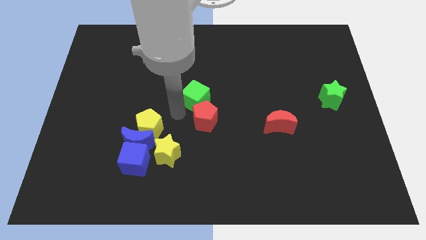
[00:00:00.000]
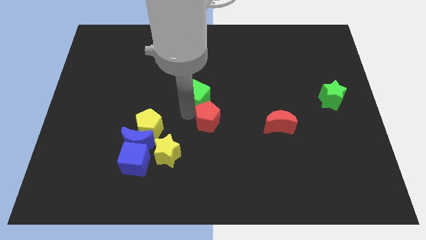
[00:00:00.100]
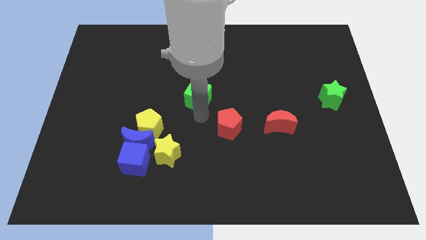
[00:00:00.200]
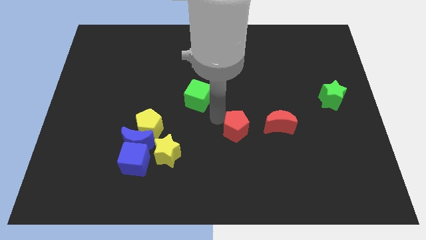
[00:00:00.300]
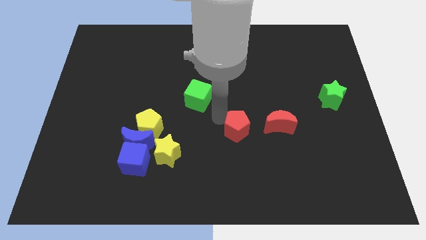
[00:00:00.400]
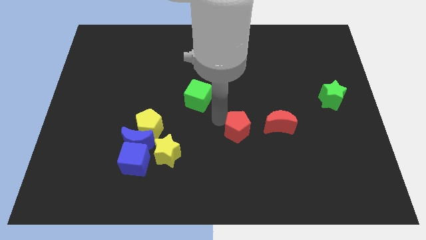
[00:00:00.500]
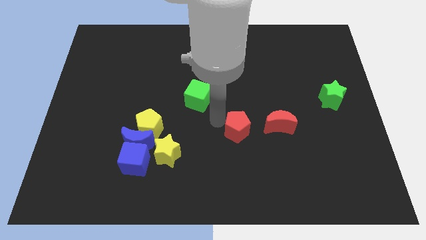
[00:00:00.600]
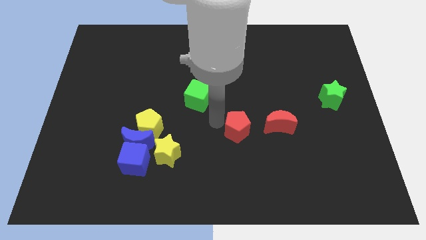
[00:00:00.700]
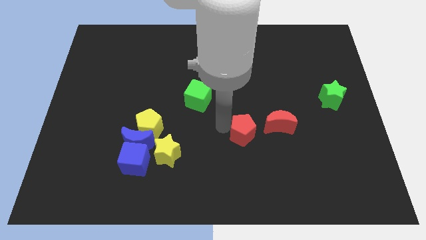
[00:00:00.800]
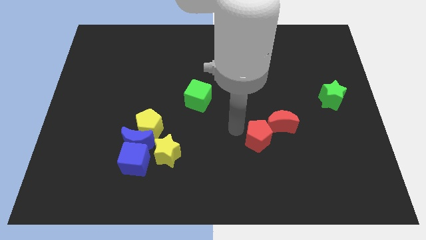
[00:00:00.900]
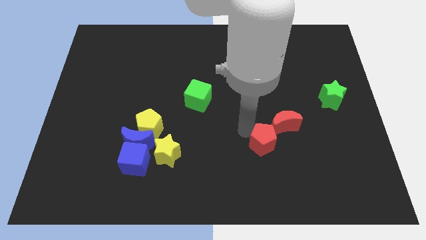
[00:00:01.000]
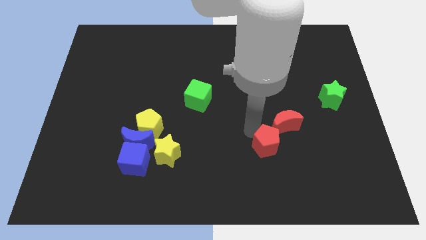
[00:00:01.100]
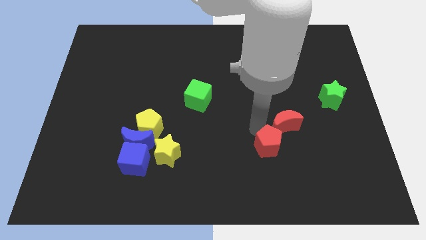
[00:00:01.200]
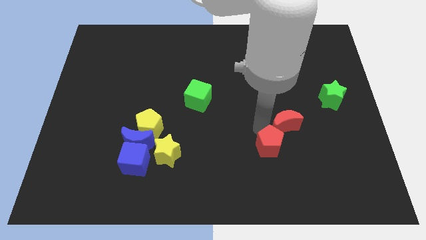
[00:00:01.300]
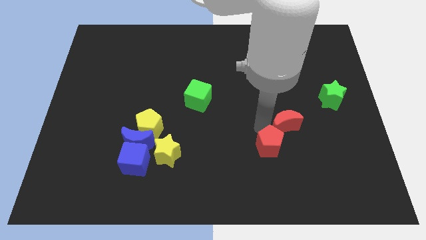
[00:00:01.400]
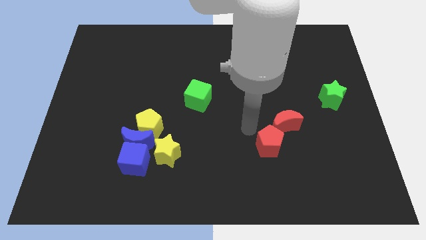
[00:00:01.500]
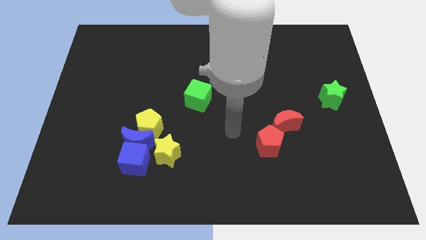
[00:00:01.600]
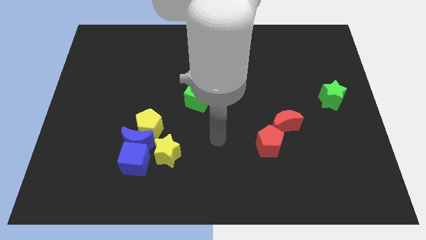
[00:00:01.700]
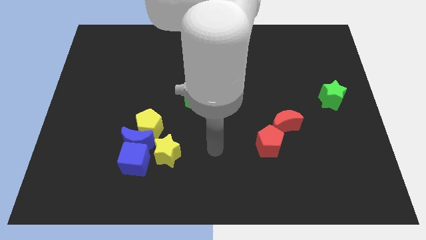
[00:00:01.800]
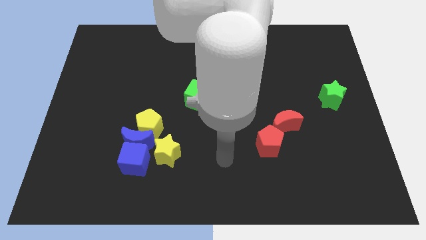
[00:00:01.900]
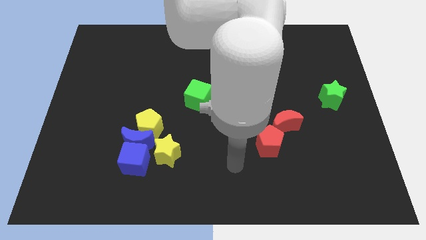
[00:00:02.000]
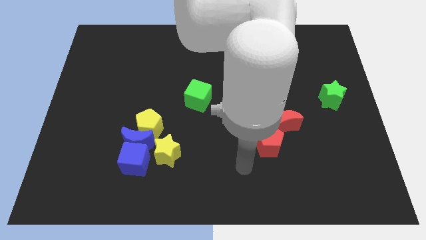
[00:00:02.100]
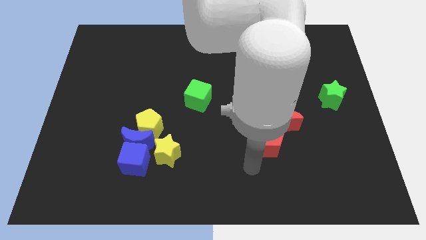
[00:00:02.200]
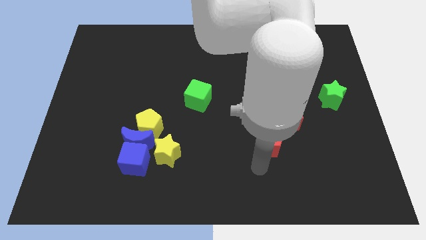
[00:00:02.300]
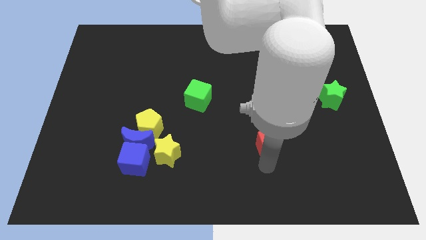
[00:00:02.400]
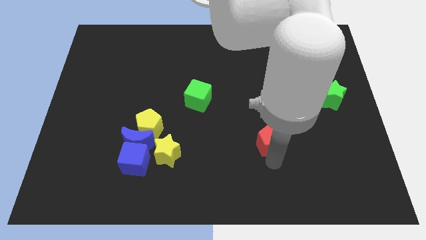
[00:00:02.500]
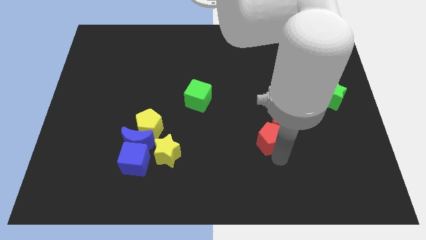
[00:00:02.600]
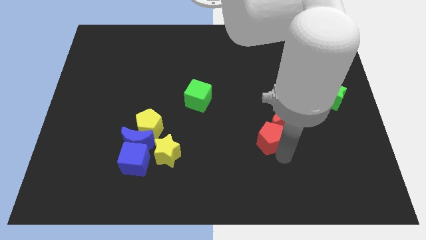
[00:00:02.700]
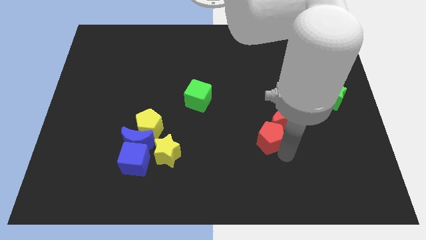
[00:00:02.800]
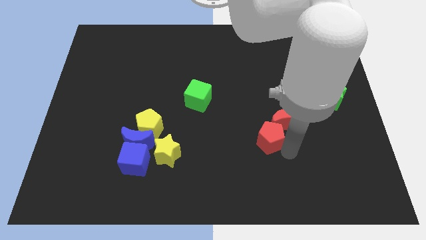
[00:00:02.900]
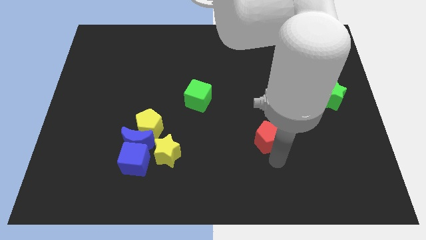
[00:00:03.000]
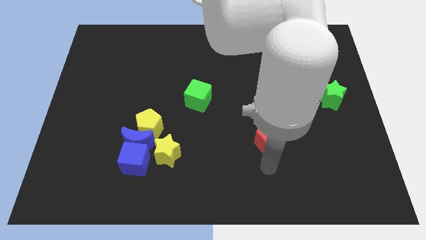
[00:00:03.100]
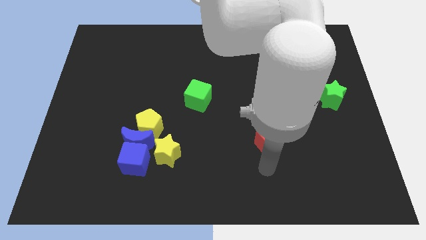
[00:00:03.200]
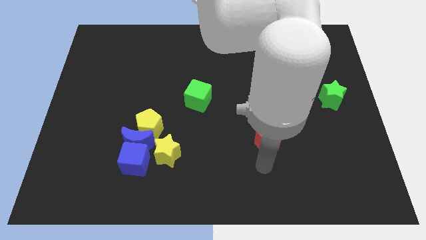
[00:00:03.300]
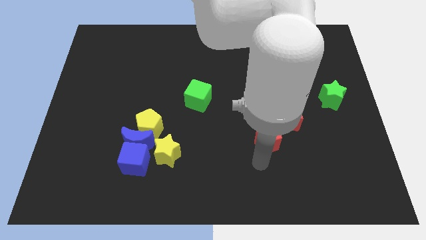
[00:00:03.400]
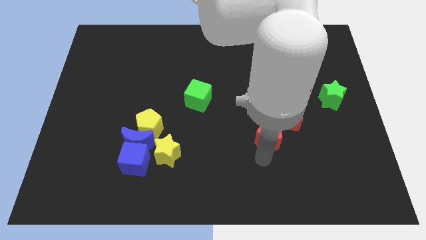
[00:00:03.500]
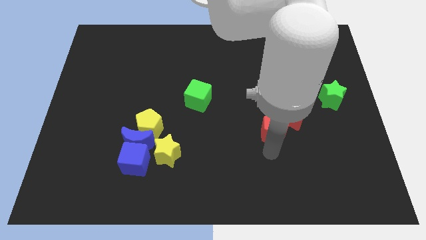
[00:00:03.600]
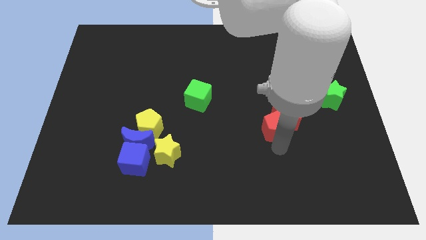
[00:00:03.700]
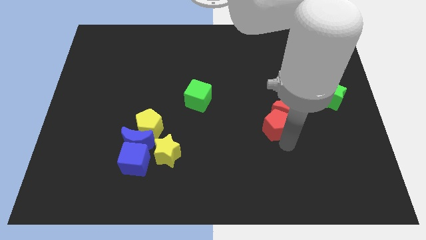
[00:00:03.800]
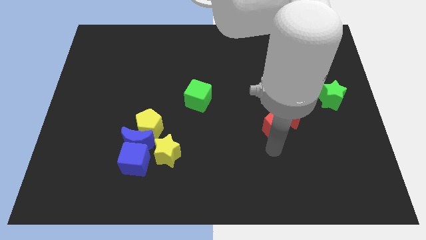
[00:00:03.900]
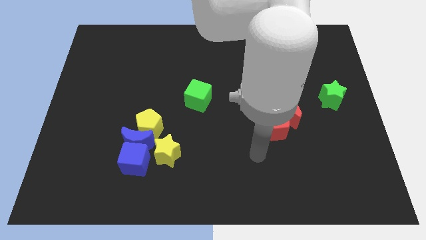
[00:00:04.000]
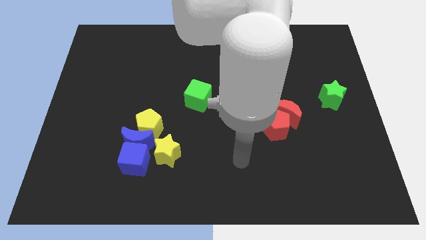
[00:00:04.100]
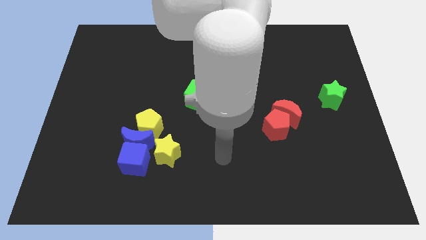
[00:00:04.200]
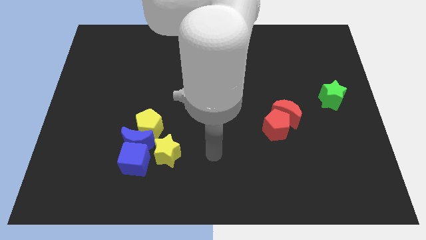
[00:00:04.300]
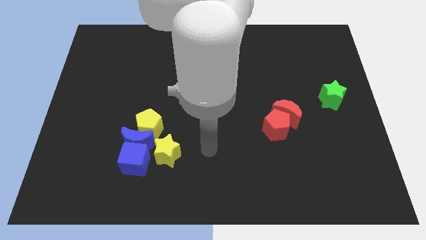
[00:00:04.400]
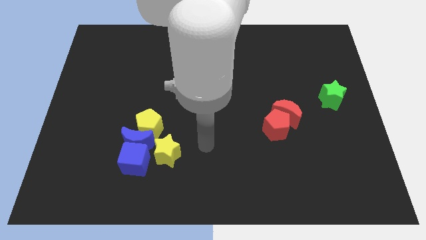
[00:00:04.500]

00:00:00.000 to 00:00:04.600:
move the red pentagon to the bottom side of the red moon

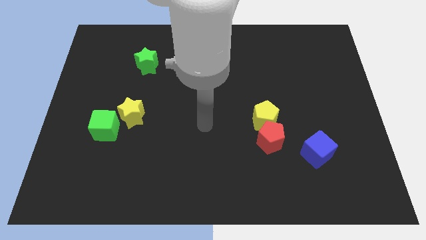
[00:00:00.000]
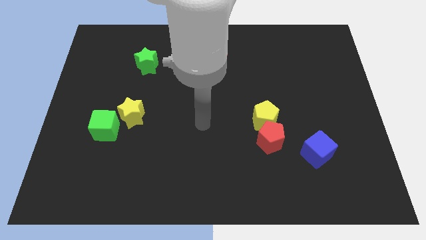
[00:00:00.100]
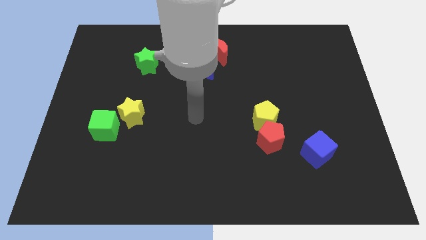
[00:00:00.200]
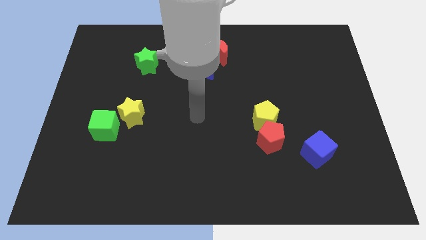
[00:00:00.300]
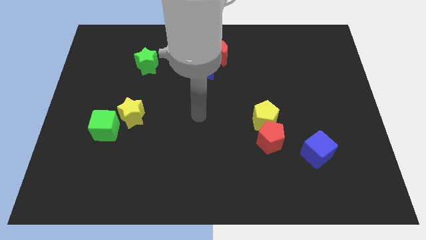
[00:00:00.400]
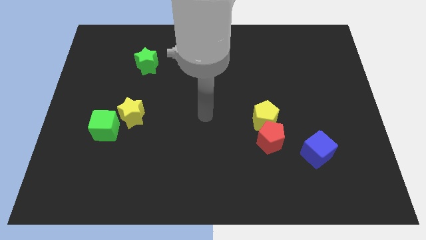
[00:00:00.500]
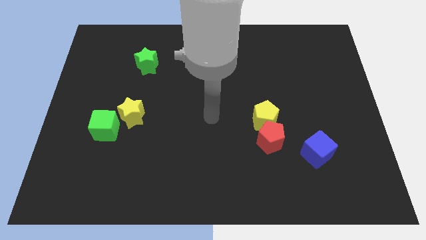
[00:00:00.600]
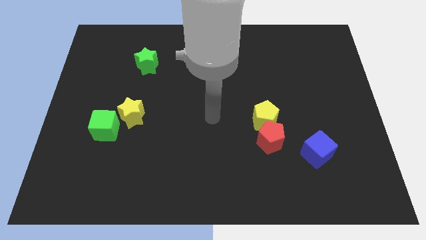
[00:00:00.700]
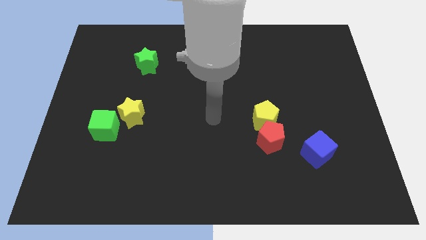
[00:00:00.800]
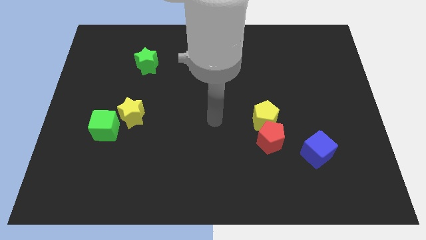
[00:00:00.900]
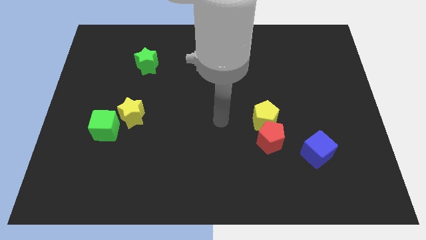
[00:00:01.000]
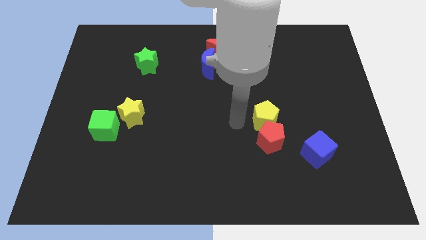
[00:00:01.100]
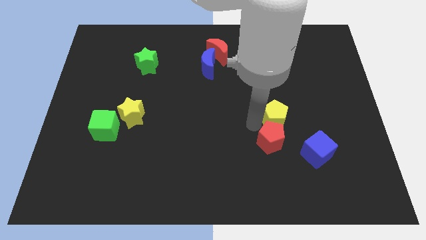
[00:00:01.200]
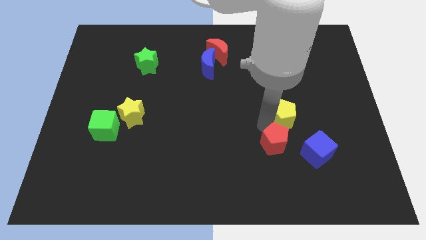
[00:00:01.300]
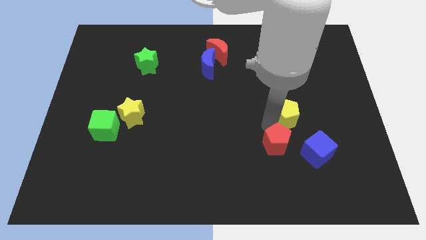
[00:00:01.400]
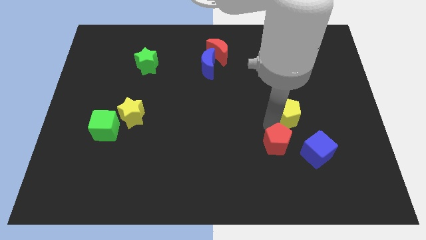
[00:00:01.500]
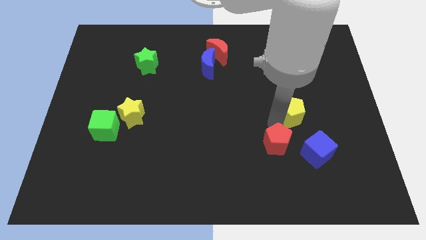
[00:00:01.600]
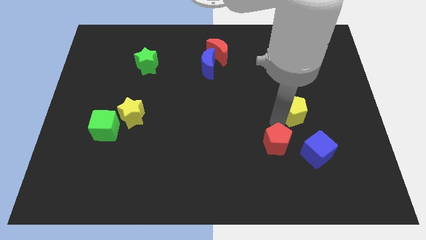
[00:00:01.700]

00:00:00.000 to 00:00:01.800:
separate the yellow pentagon and the red pentagon

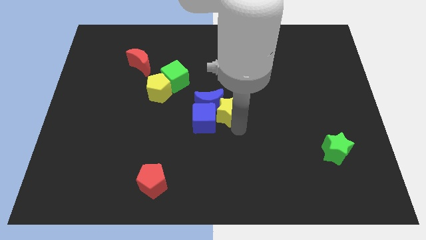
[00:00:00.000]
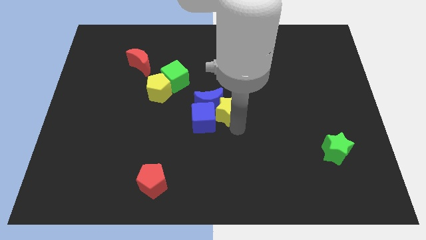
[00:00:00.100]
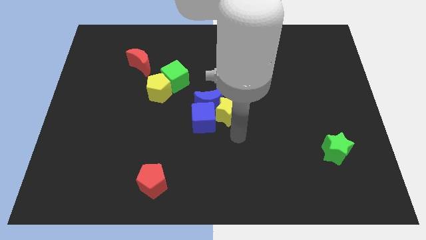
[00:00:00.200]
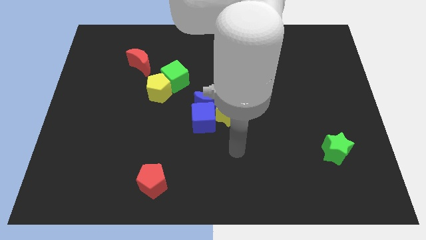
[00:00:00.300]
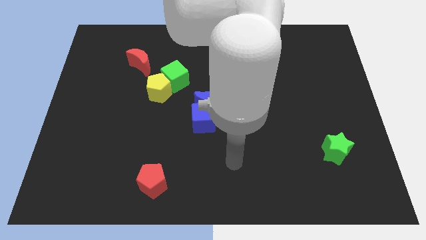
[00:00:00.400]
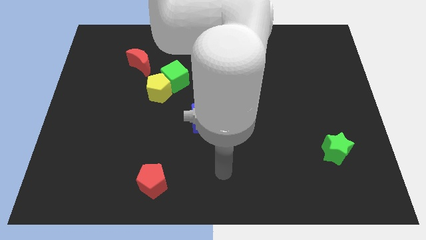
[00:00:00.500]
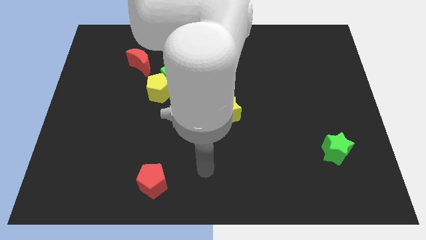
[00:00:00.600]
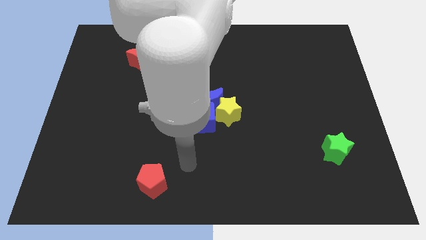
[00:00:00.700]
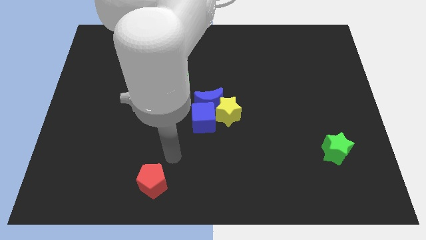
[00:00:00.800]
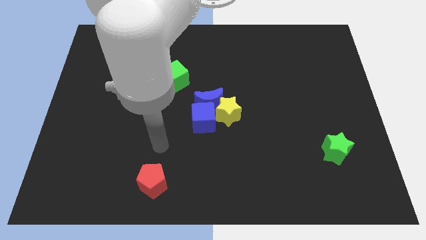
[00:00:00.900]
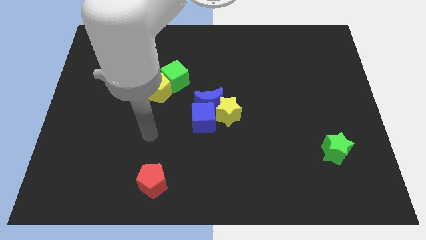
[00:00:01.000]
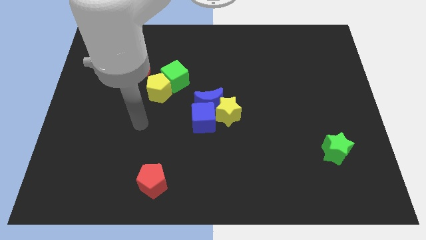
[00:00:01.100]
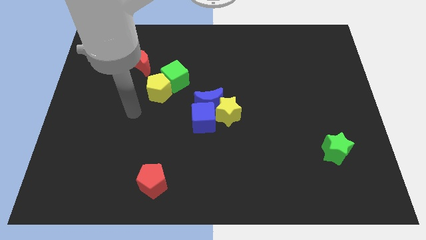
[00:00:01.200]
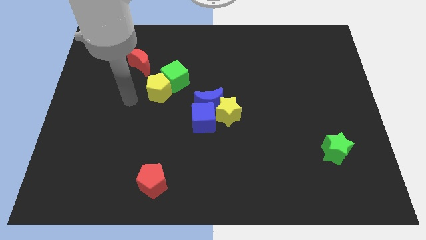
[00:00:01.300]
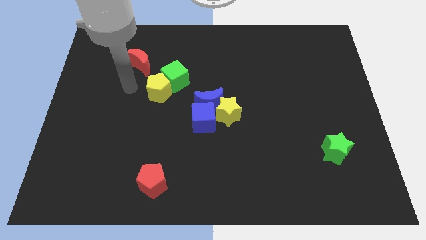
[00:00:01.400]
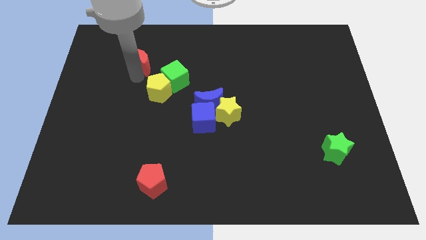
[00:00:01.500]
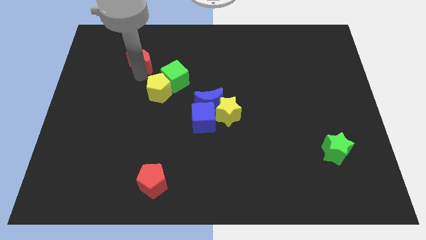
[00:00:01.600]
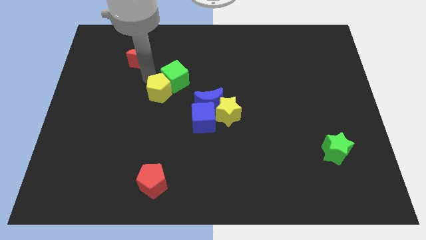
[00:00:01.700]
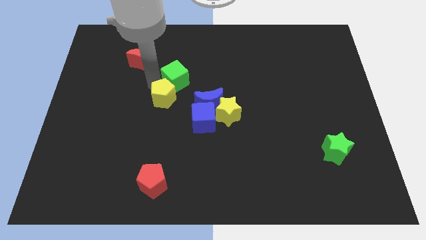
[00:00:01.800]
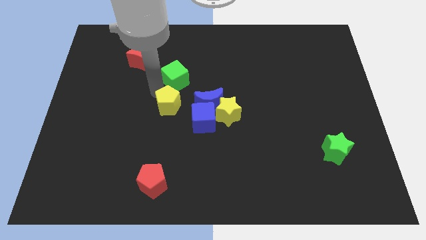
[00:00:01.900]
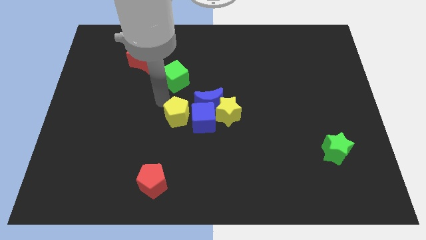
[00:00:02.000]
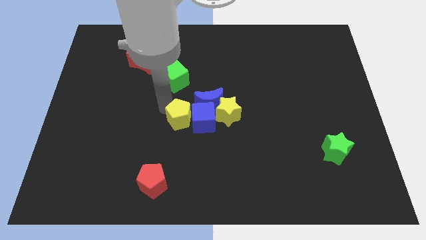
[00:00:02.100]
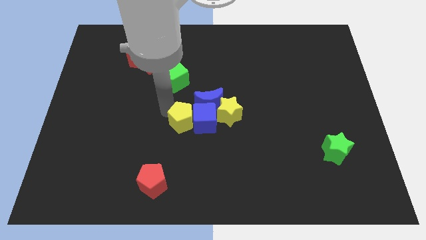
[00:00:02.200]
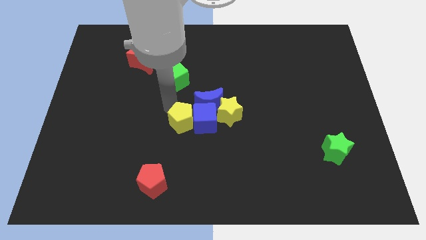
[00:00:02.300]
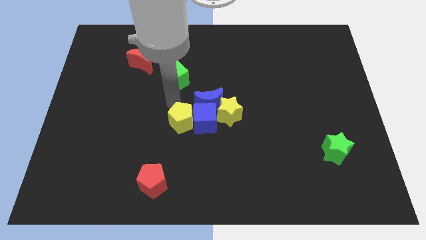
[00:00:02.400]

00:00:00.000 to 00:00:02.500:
place yellow pentagon beside blue cube
